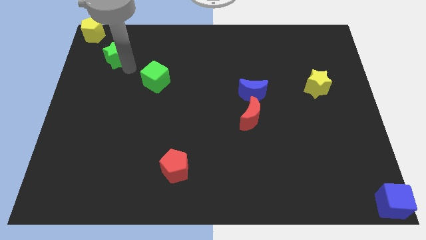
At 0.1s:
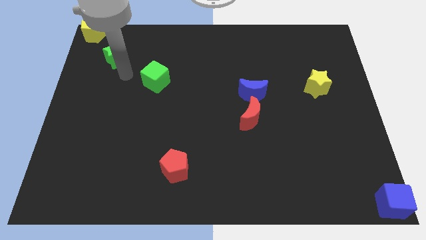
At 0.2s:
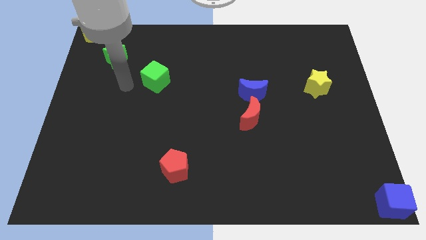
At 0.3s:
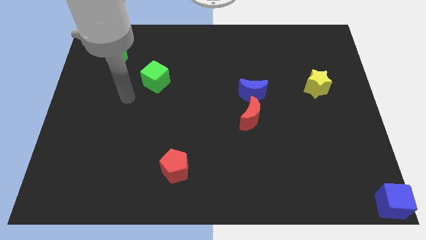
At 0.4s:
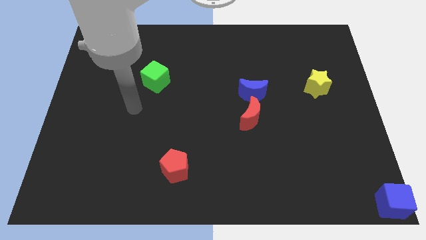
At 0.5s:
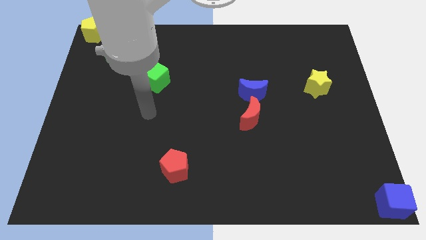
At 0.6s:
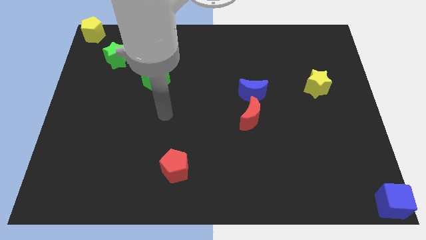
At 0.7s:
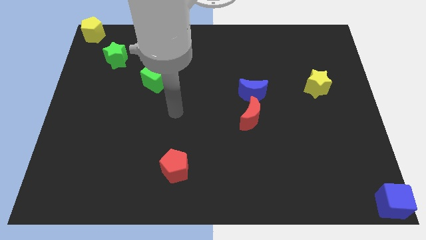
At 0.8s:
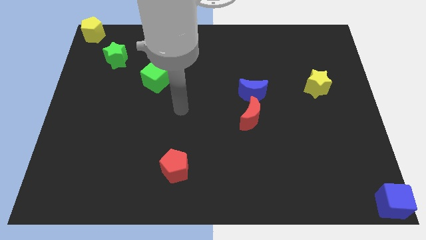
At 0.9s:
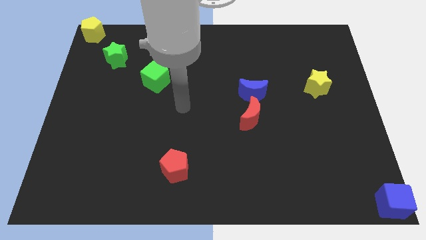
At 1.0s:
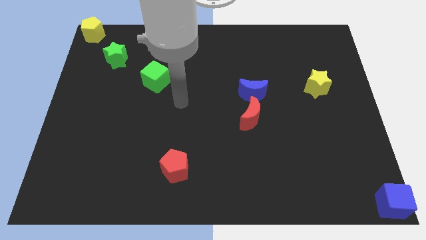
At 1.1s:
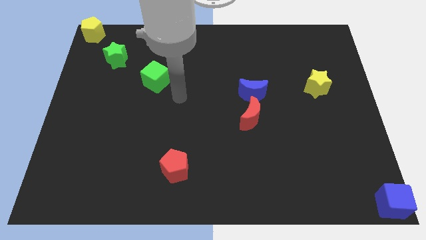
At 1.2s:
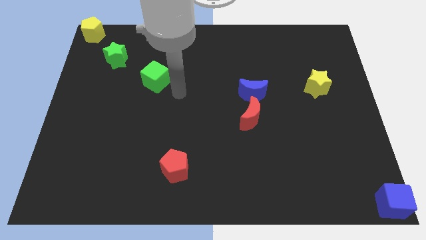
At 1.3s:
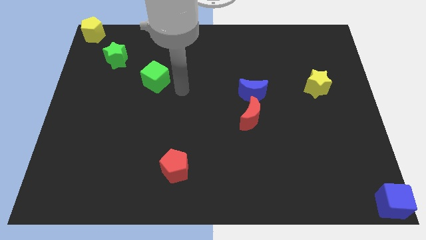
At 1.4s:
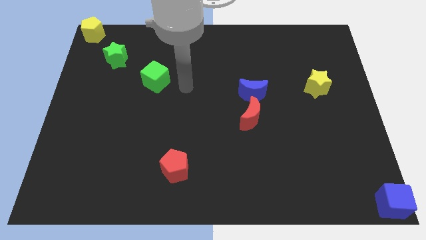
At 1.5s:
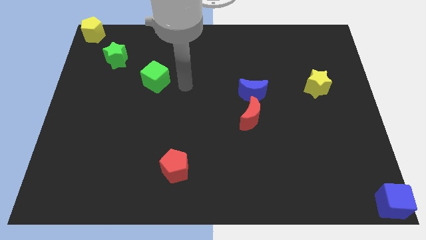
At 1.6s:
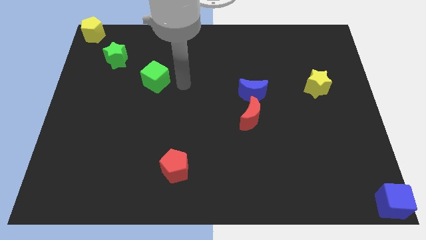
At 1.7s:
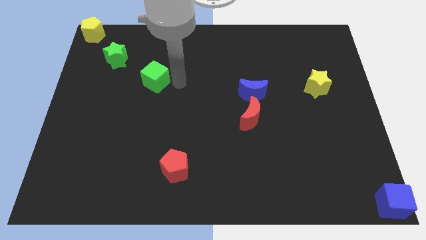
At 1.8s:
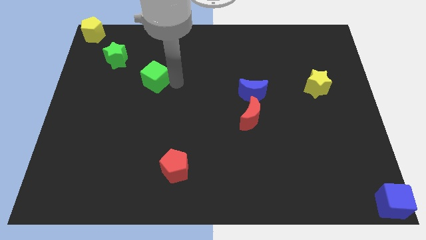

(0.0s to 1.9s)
point your arm towards the top right side of the green cube

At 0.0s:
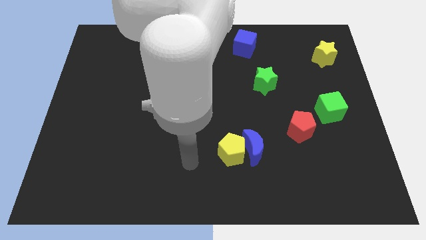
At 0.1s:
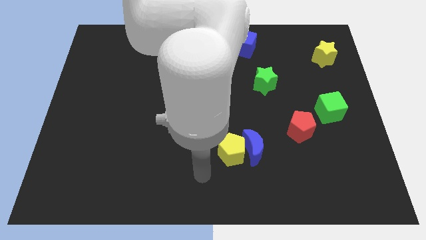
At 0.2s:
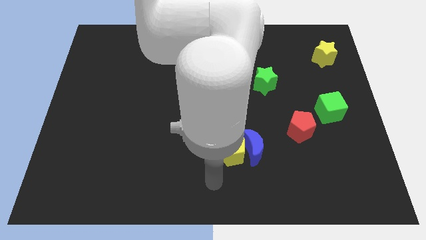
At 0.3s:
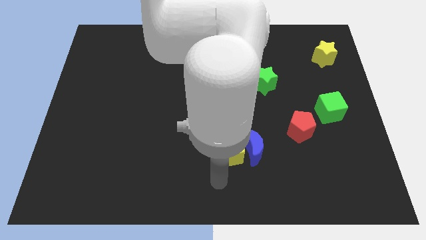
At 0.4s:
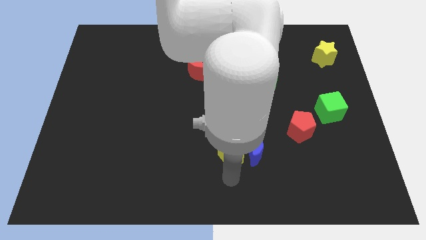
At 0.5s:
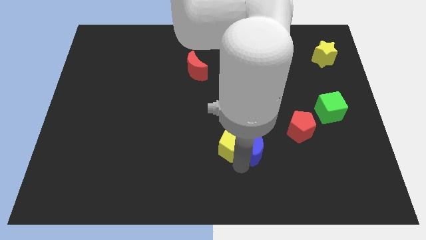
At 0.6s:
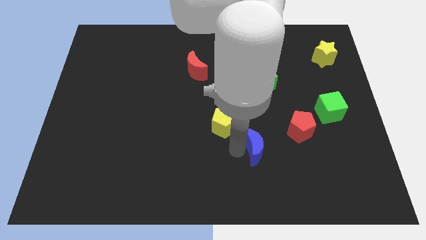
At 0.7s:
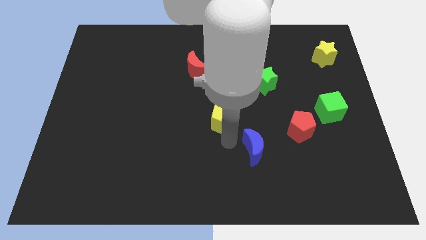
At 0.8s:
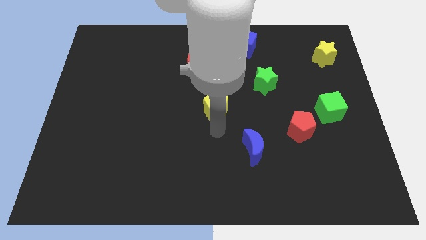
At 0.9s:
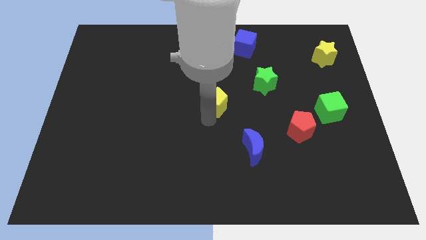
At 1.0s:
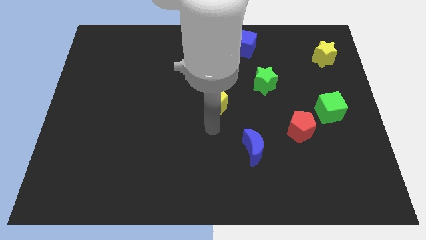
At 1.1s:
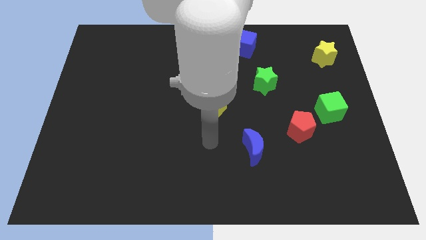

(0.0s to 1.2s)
place the yellow pentagon at the centre of the board

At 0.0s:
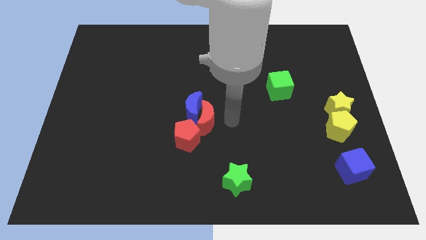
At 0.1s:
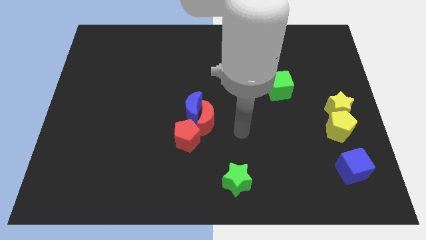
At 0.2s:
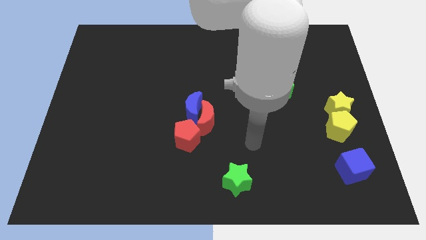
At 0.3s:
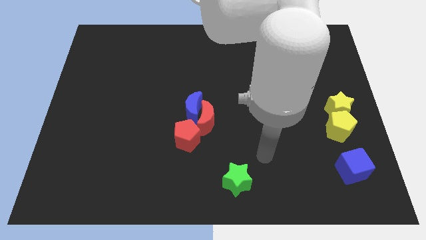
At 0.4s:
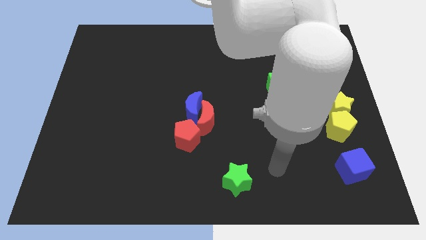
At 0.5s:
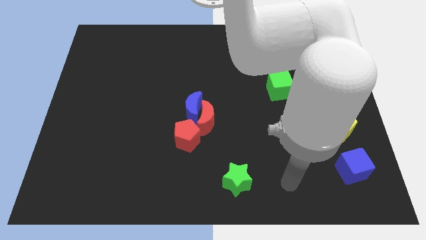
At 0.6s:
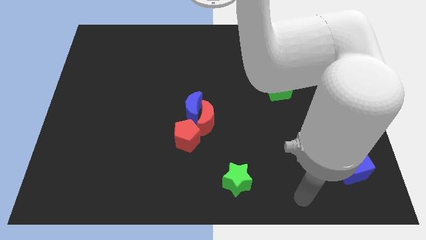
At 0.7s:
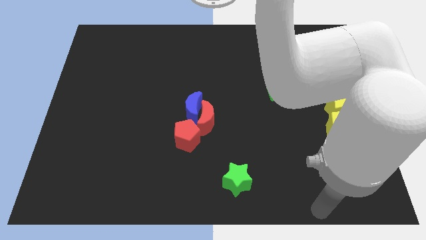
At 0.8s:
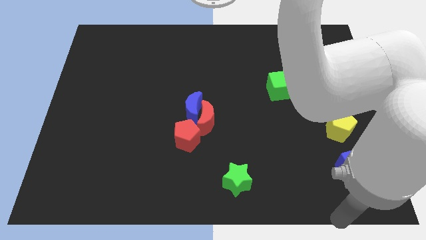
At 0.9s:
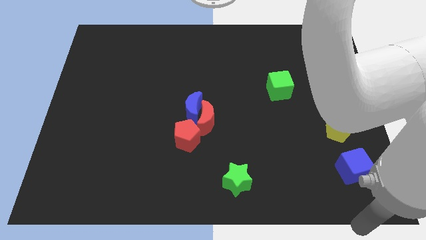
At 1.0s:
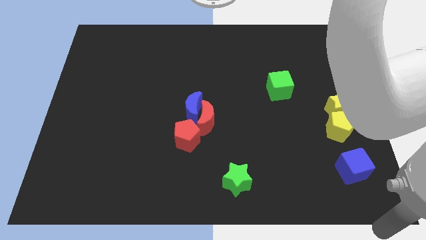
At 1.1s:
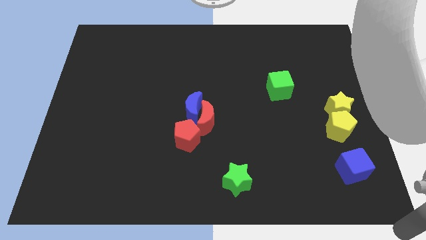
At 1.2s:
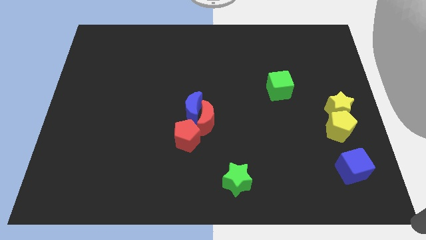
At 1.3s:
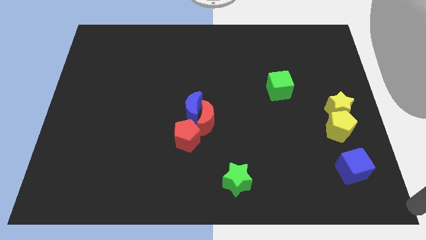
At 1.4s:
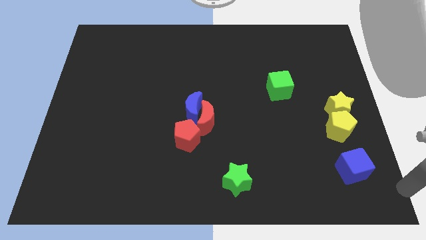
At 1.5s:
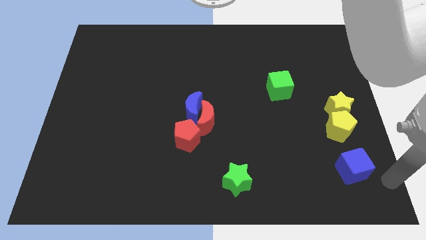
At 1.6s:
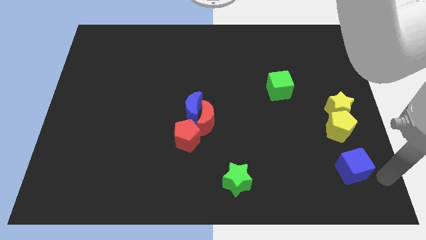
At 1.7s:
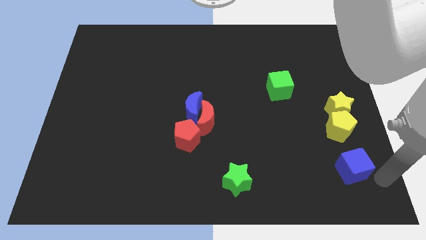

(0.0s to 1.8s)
move the arm towards the blue cube

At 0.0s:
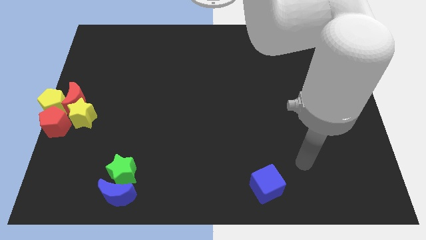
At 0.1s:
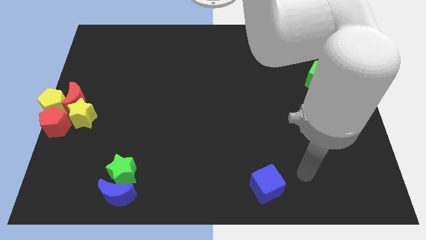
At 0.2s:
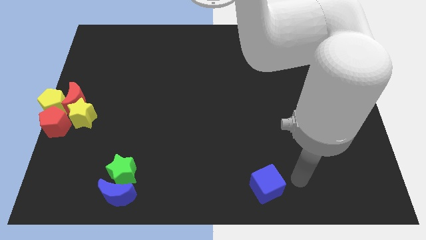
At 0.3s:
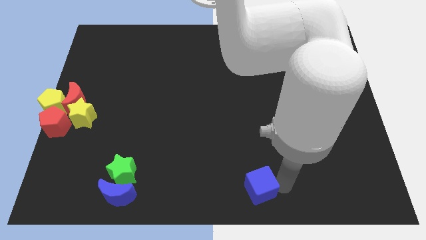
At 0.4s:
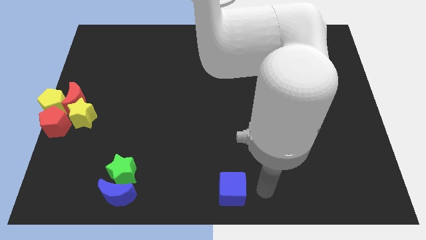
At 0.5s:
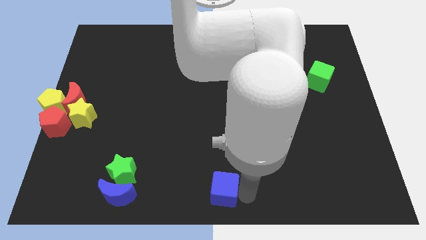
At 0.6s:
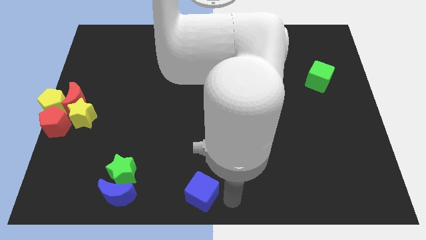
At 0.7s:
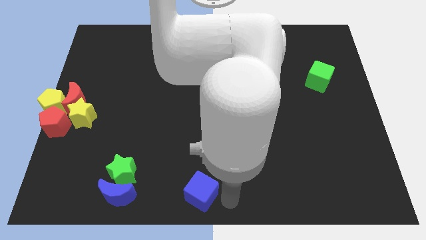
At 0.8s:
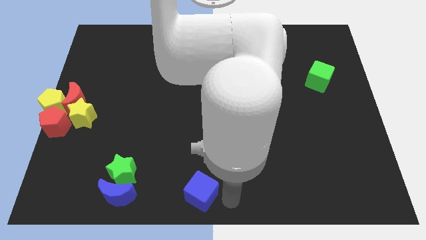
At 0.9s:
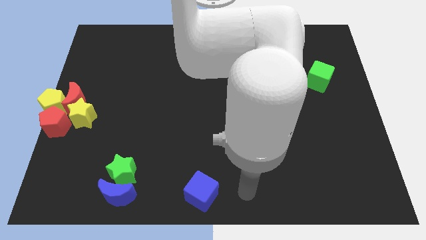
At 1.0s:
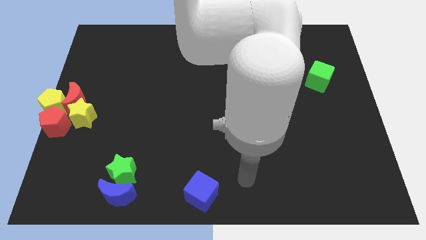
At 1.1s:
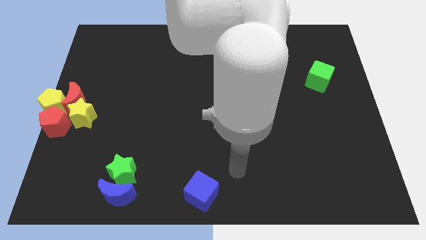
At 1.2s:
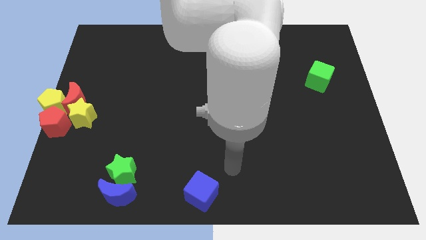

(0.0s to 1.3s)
place the blue in the bottom center

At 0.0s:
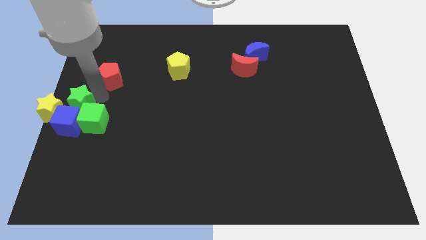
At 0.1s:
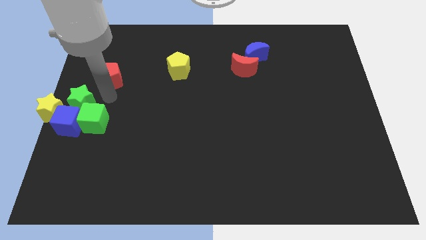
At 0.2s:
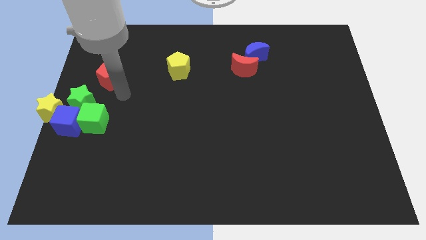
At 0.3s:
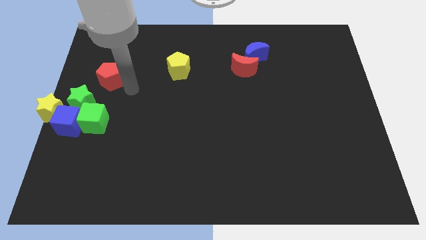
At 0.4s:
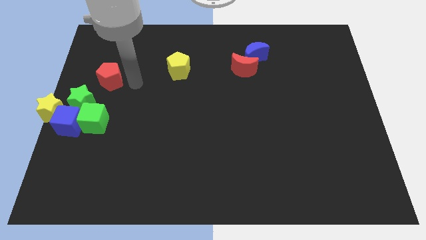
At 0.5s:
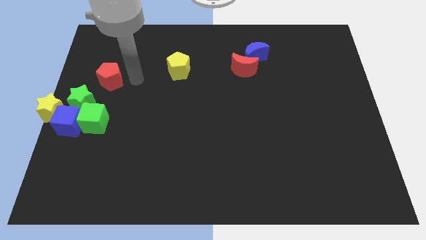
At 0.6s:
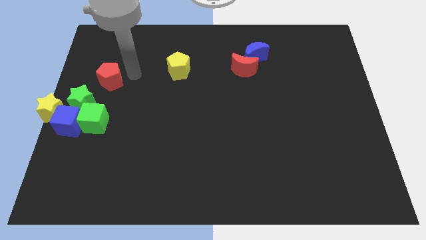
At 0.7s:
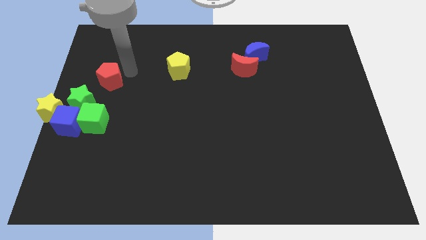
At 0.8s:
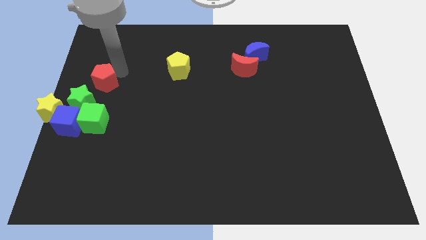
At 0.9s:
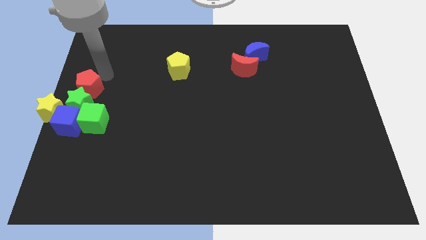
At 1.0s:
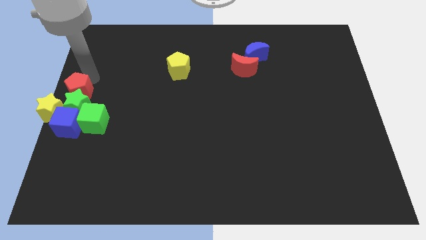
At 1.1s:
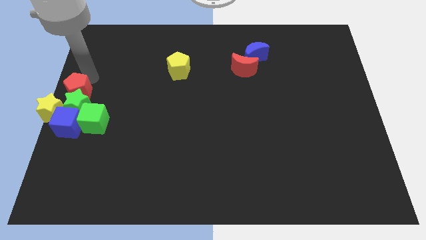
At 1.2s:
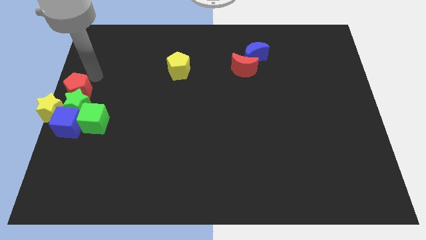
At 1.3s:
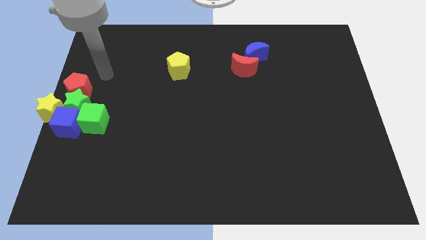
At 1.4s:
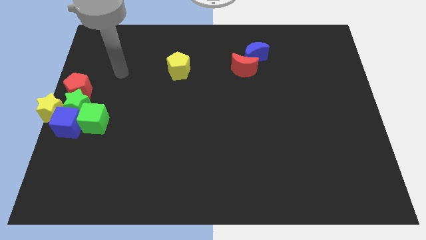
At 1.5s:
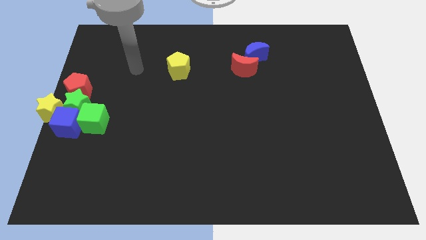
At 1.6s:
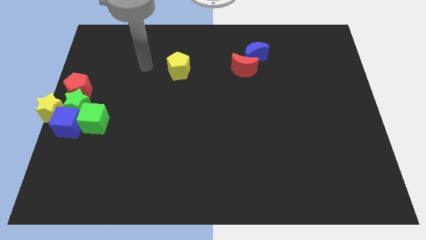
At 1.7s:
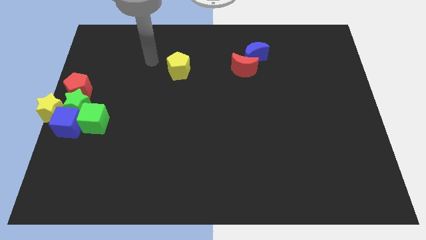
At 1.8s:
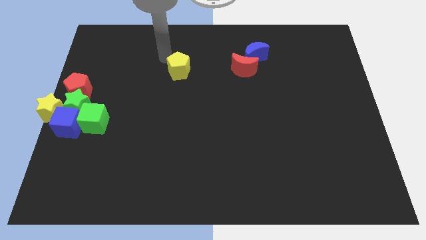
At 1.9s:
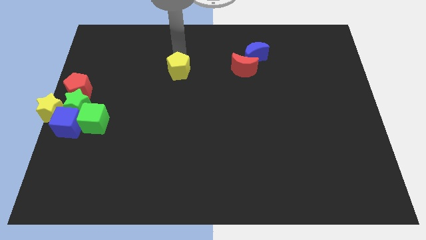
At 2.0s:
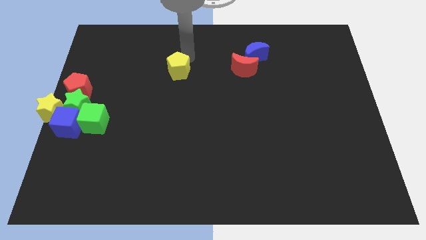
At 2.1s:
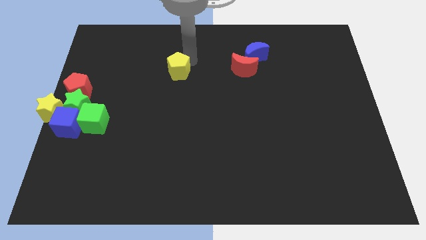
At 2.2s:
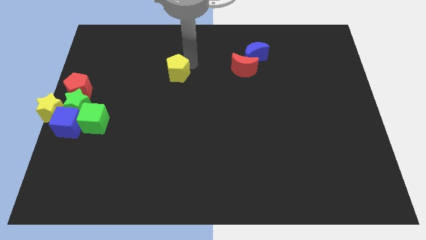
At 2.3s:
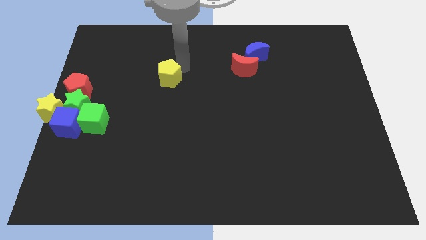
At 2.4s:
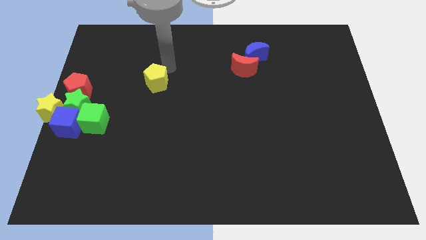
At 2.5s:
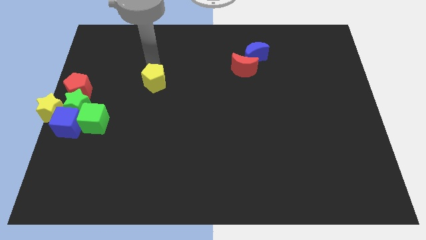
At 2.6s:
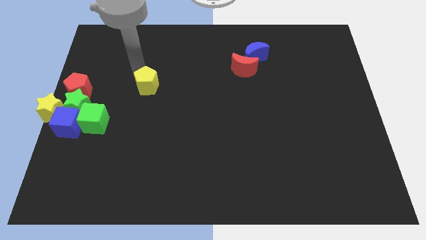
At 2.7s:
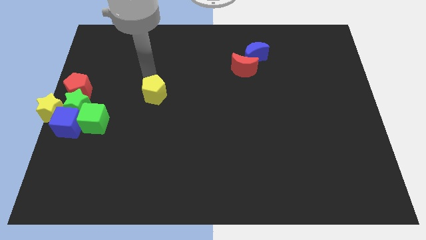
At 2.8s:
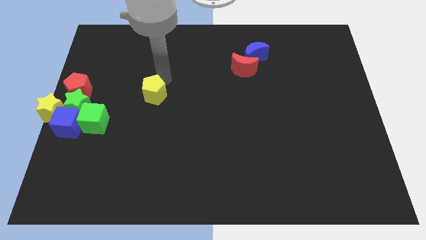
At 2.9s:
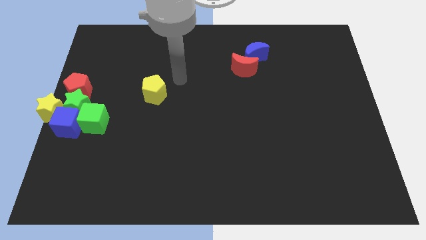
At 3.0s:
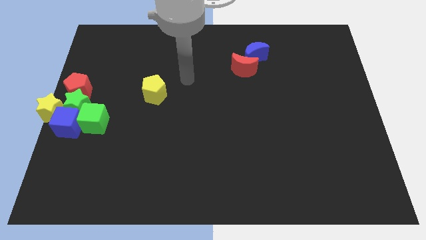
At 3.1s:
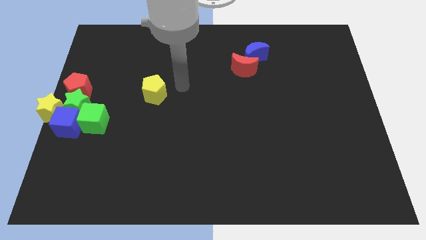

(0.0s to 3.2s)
place the red pentagon and yellow pentagon parallel to each other
